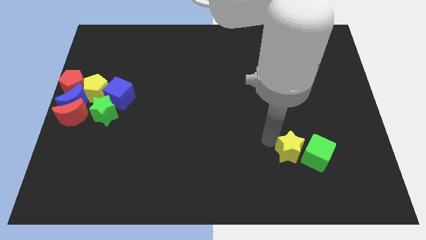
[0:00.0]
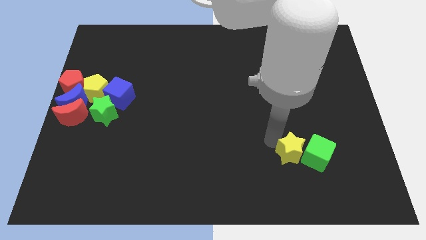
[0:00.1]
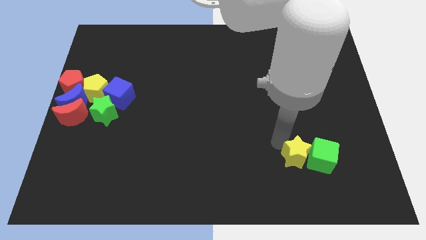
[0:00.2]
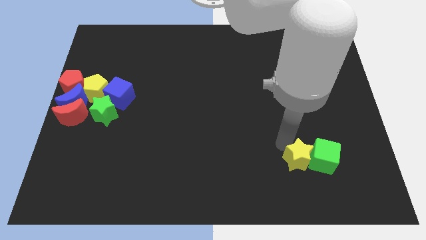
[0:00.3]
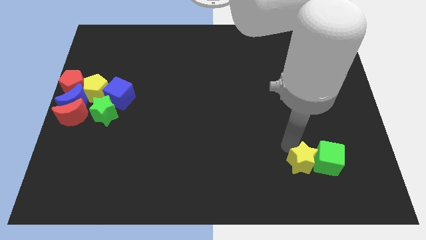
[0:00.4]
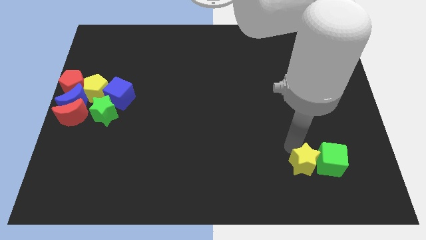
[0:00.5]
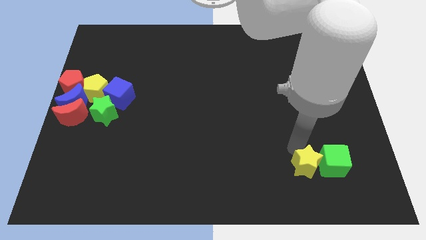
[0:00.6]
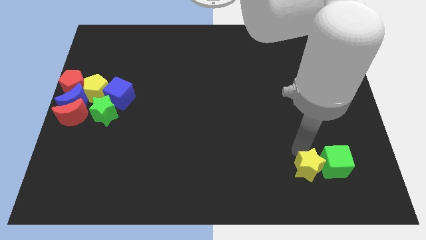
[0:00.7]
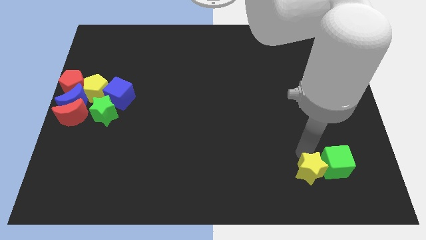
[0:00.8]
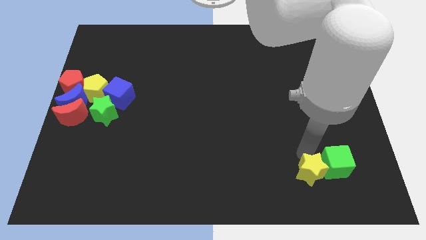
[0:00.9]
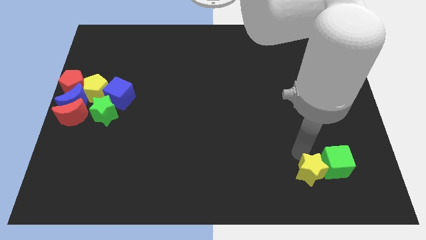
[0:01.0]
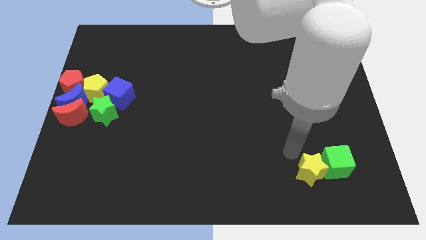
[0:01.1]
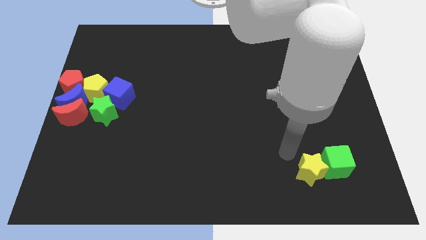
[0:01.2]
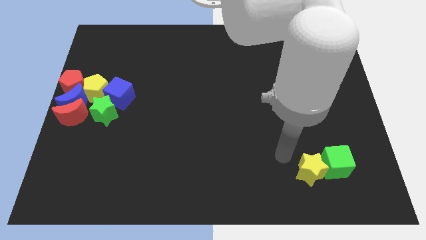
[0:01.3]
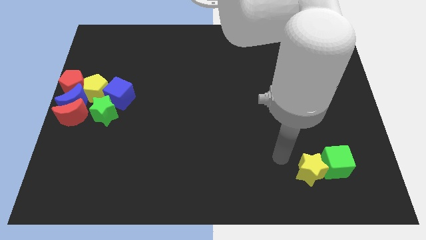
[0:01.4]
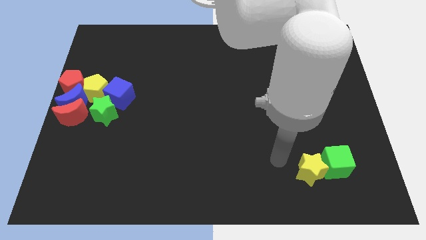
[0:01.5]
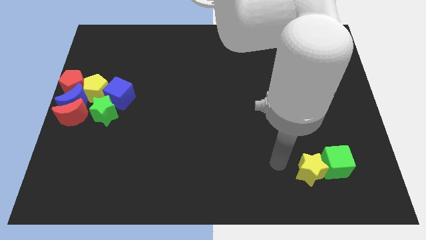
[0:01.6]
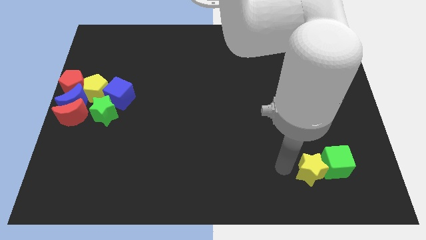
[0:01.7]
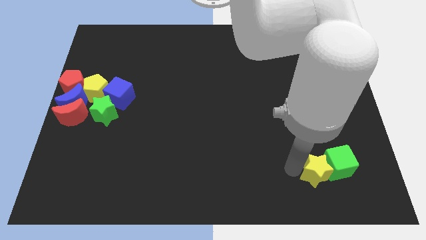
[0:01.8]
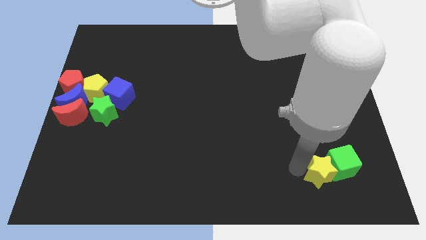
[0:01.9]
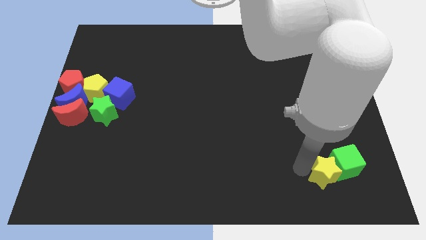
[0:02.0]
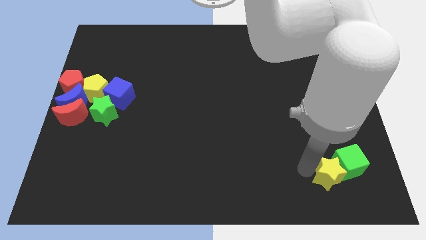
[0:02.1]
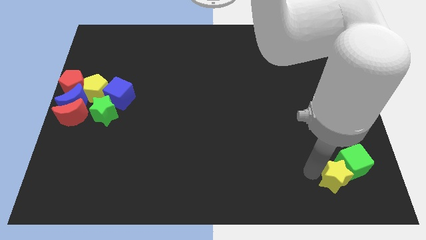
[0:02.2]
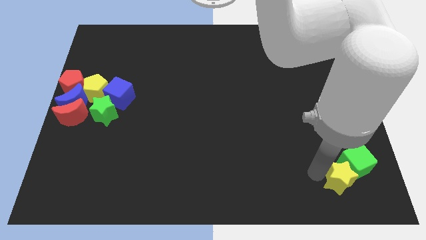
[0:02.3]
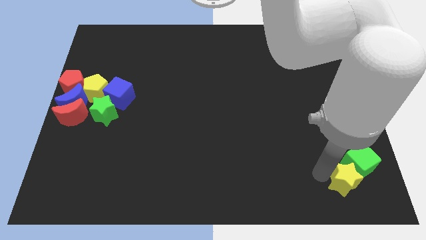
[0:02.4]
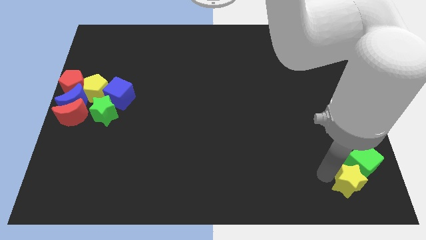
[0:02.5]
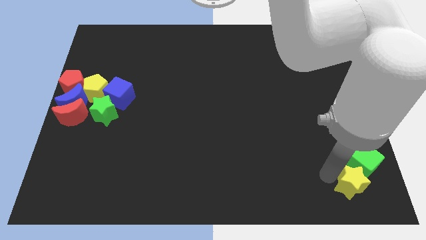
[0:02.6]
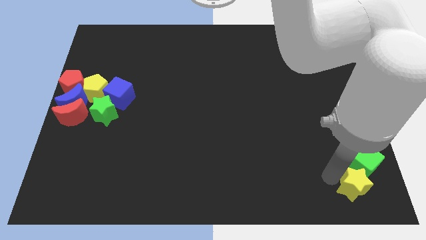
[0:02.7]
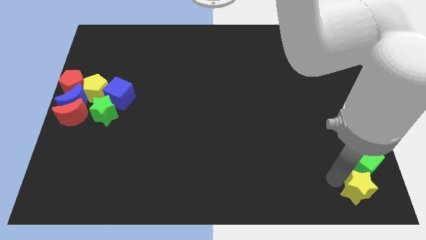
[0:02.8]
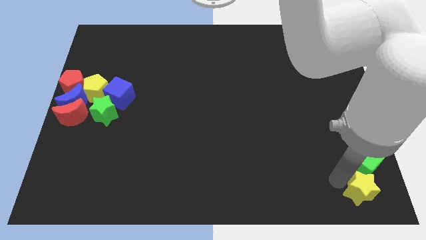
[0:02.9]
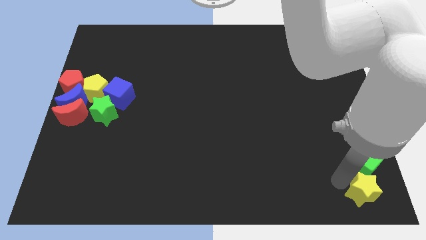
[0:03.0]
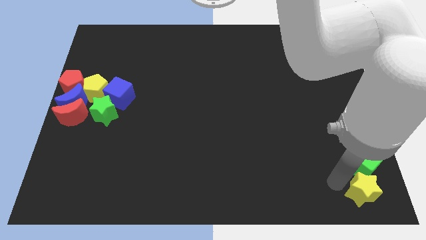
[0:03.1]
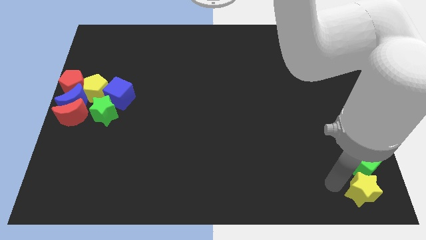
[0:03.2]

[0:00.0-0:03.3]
push the yellow star and green cube to the bottom right side of the board

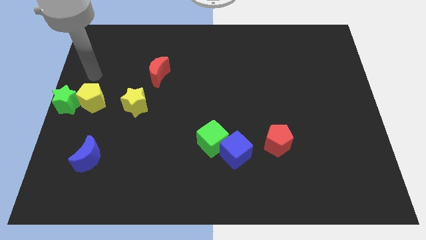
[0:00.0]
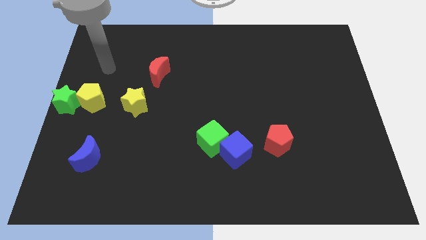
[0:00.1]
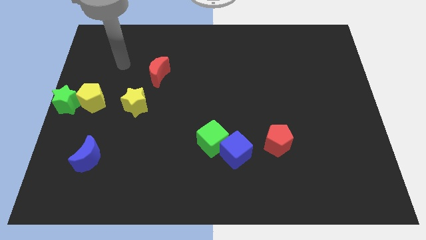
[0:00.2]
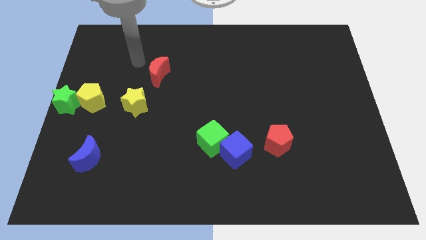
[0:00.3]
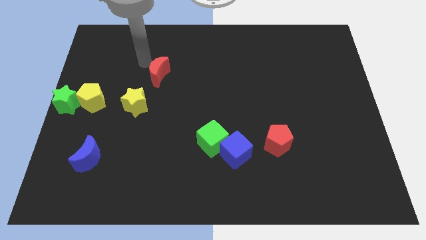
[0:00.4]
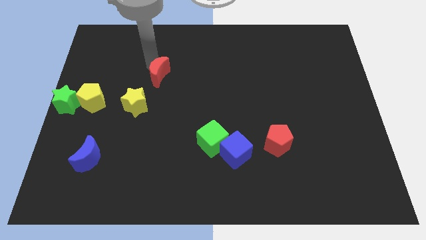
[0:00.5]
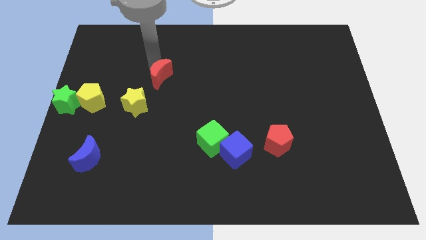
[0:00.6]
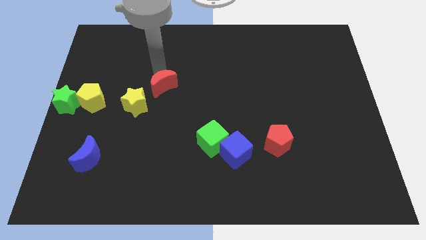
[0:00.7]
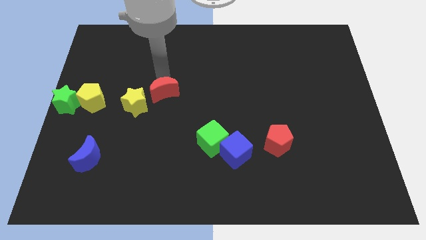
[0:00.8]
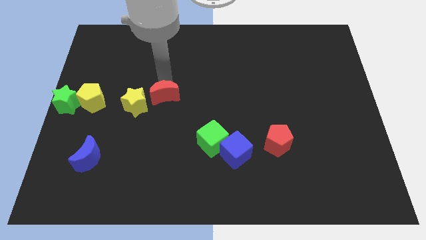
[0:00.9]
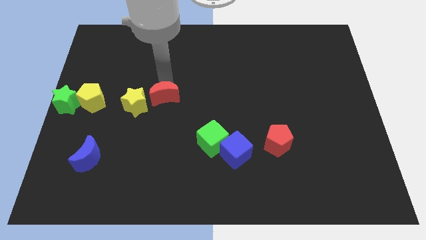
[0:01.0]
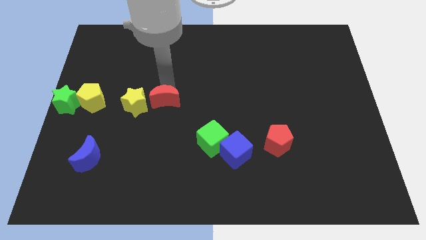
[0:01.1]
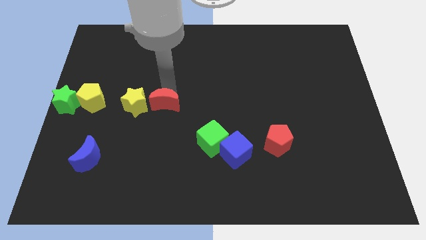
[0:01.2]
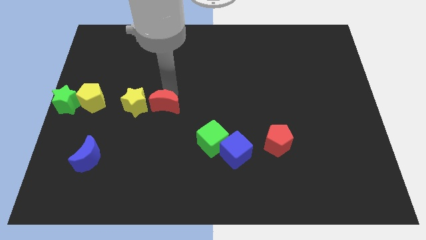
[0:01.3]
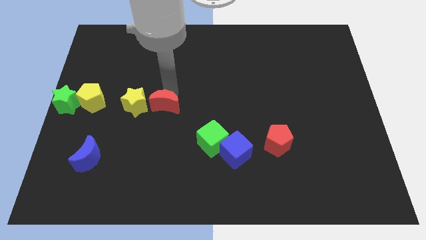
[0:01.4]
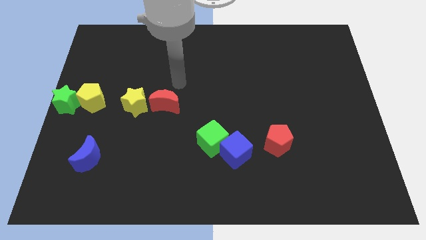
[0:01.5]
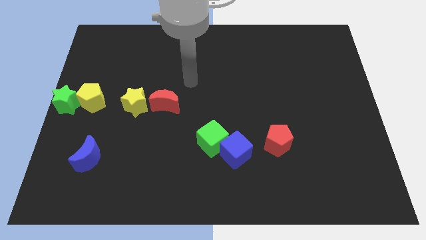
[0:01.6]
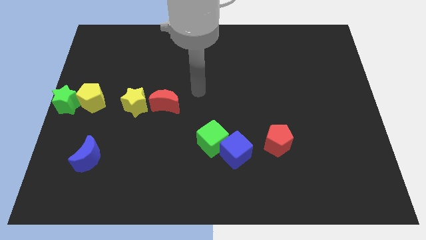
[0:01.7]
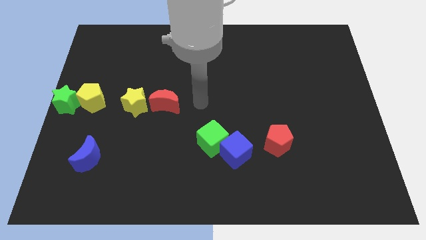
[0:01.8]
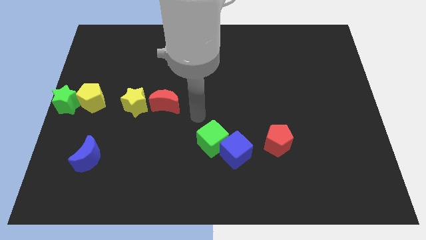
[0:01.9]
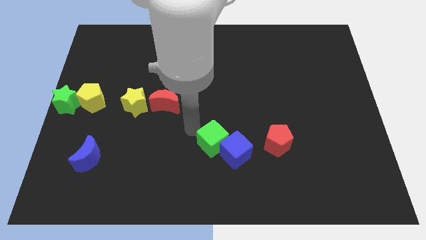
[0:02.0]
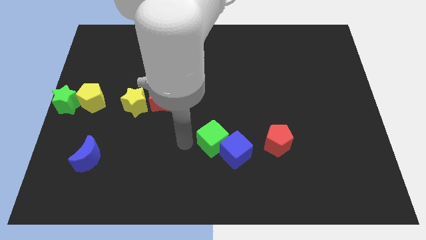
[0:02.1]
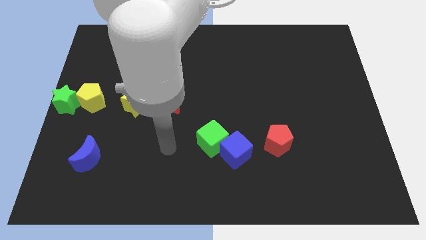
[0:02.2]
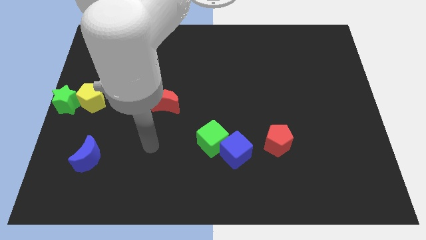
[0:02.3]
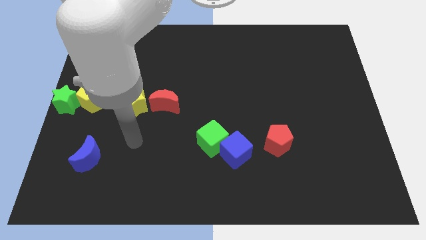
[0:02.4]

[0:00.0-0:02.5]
place the red crescent to the right of the yellow star

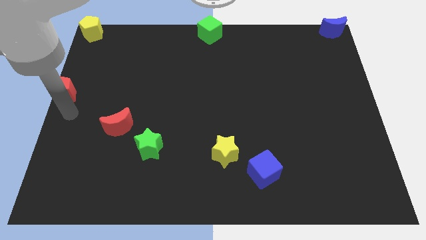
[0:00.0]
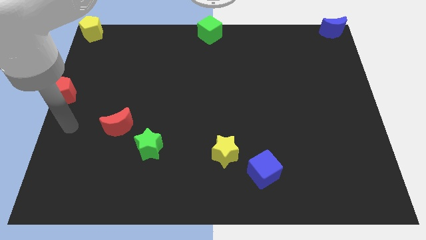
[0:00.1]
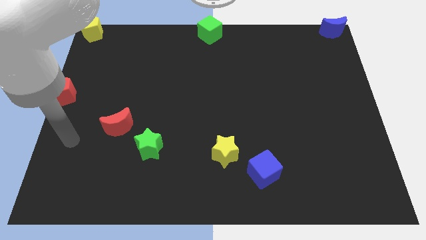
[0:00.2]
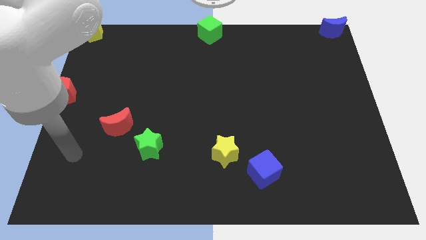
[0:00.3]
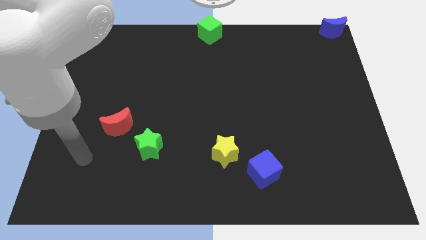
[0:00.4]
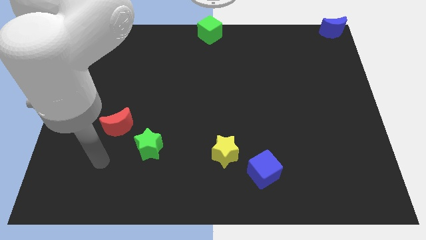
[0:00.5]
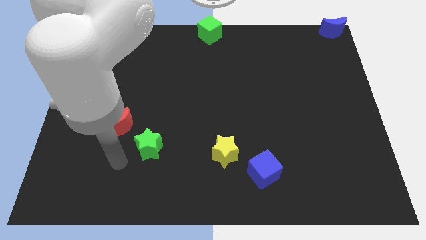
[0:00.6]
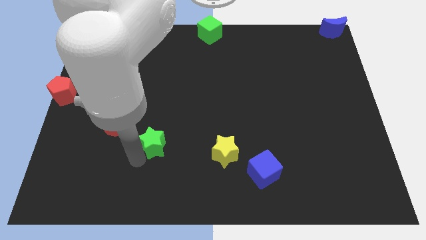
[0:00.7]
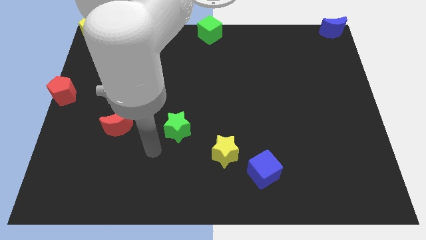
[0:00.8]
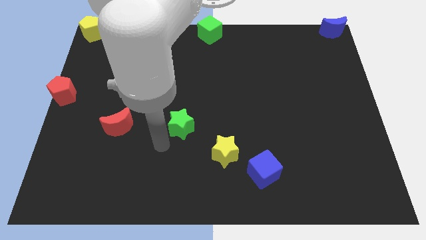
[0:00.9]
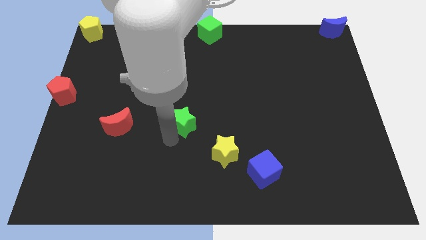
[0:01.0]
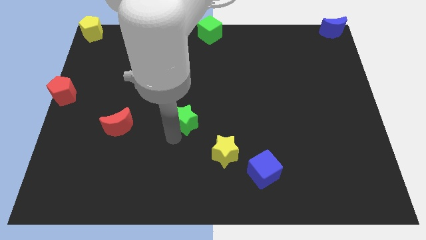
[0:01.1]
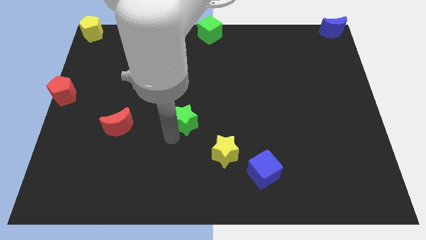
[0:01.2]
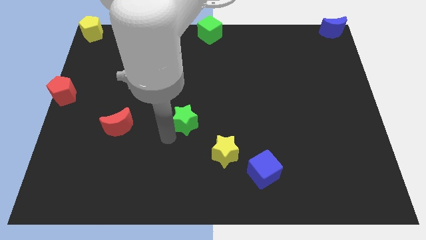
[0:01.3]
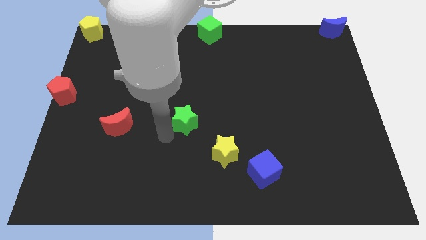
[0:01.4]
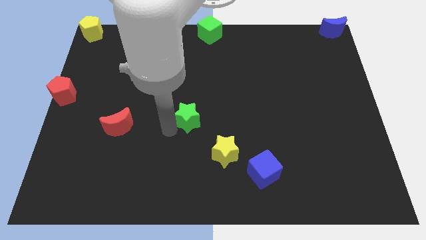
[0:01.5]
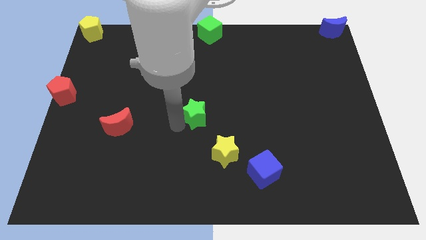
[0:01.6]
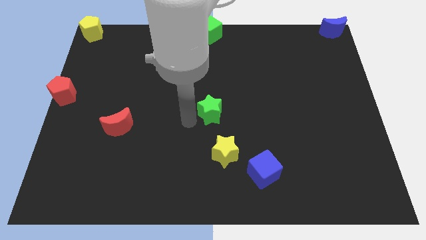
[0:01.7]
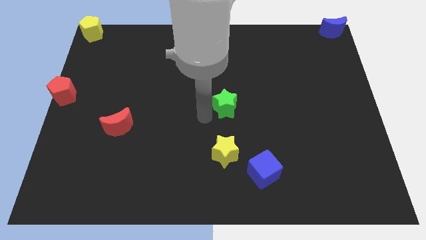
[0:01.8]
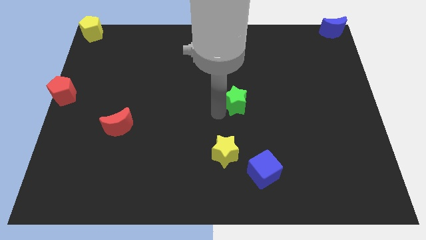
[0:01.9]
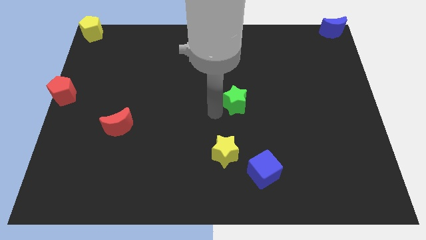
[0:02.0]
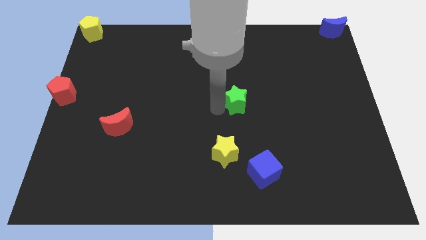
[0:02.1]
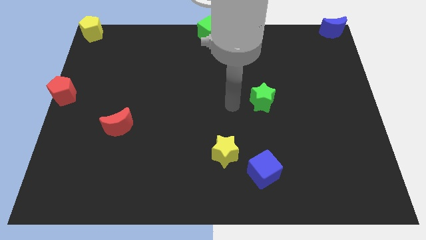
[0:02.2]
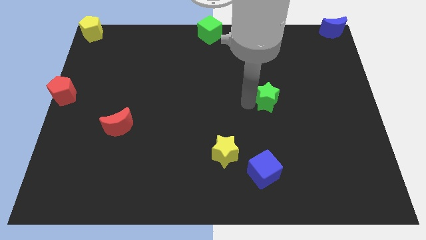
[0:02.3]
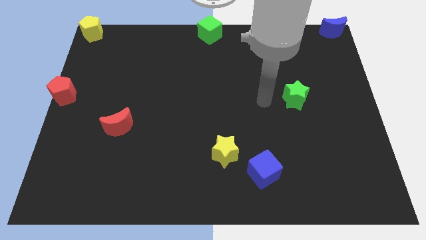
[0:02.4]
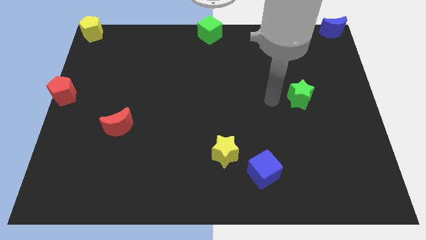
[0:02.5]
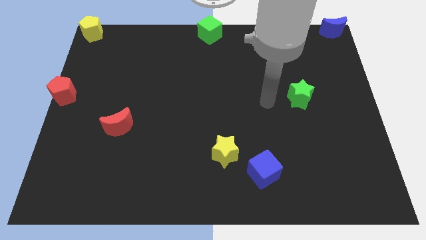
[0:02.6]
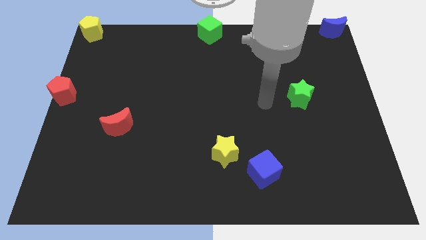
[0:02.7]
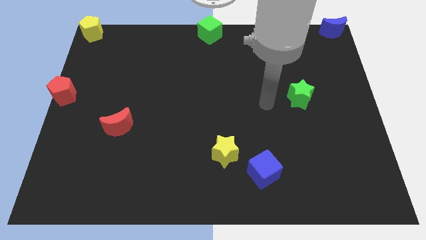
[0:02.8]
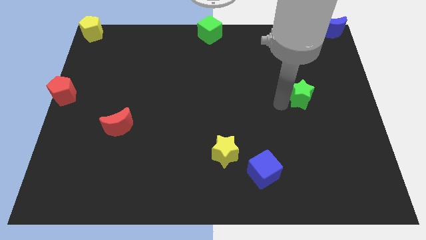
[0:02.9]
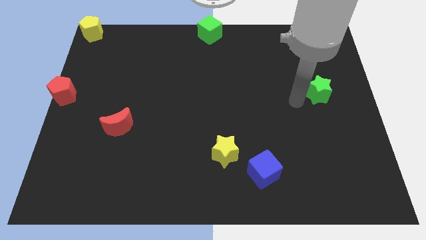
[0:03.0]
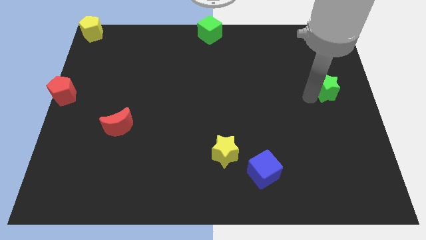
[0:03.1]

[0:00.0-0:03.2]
slide the green star diagonally to the bottom right of the green cube
